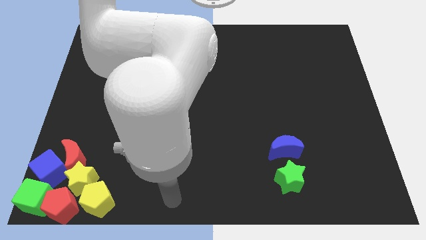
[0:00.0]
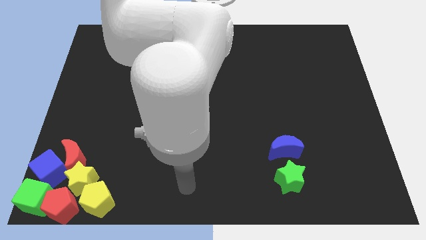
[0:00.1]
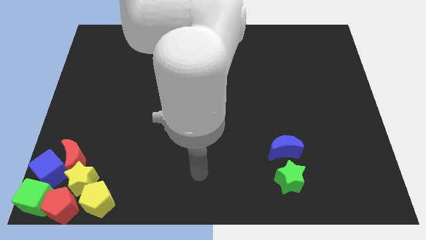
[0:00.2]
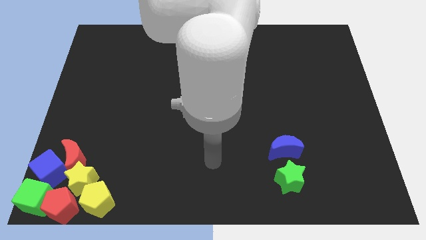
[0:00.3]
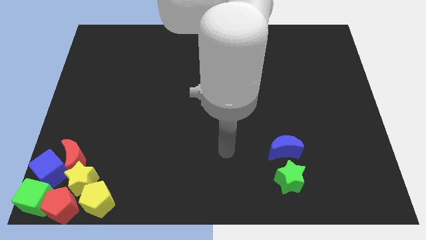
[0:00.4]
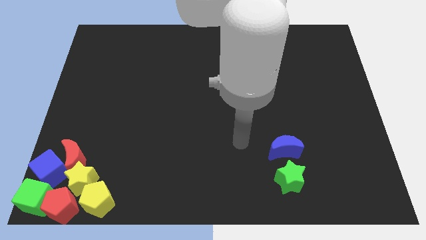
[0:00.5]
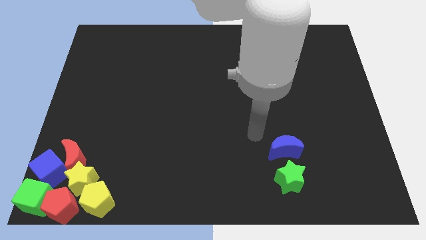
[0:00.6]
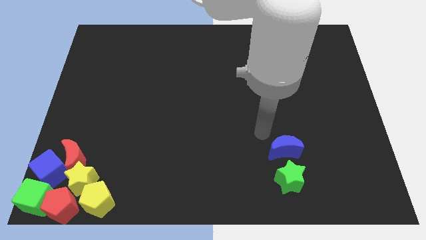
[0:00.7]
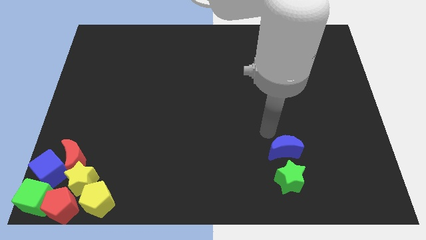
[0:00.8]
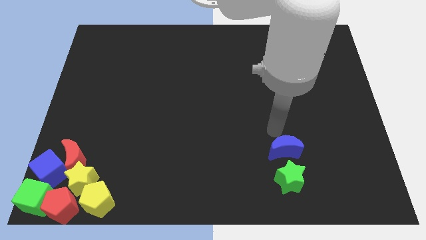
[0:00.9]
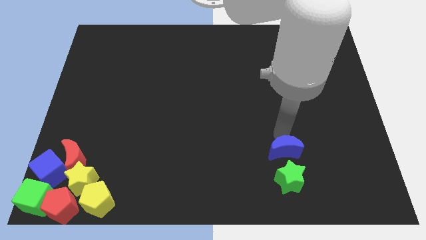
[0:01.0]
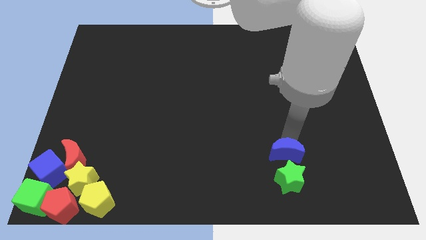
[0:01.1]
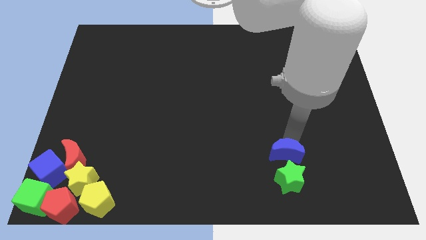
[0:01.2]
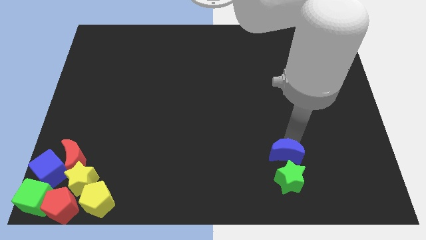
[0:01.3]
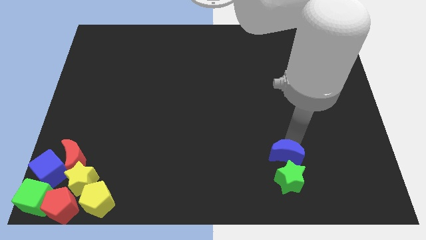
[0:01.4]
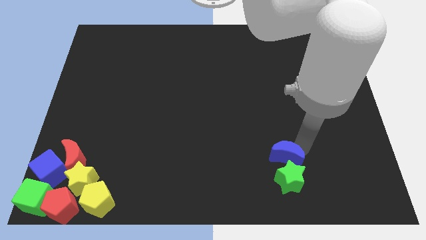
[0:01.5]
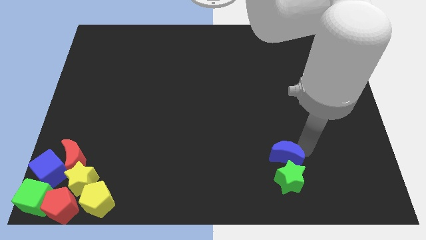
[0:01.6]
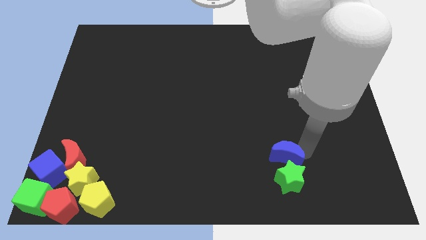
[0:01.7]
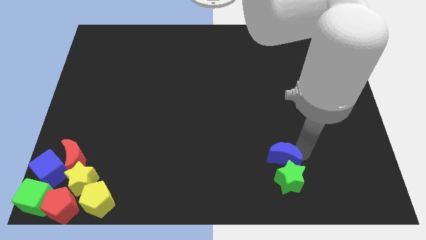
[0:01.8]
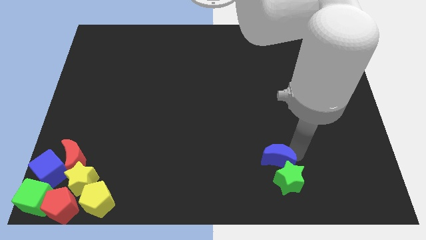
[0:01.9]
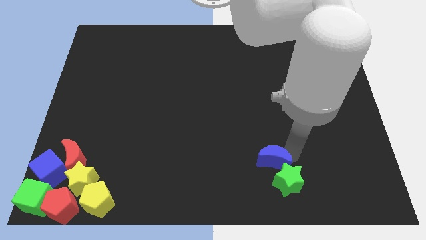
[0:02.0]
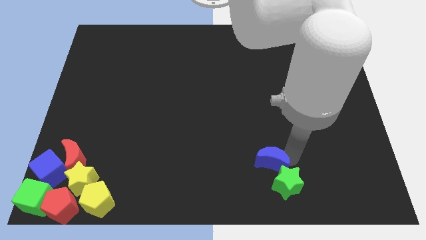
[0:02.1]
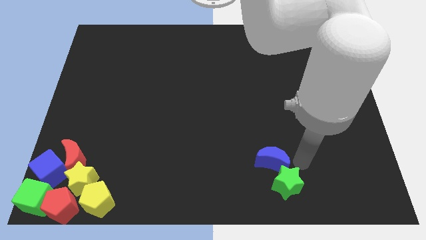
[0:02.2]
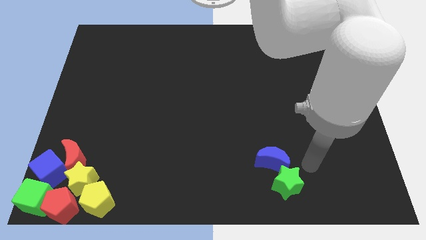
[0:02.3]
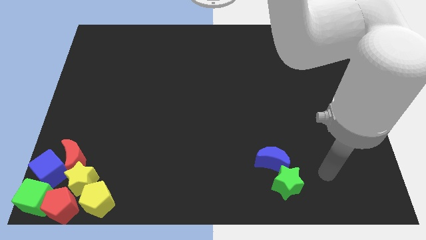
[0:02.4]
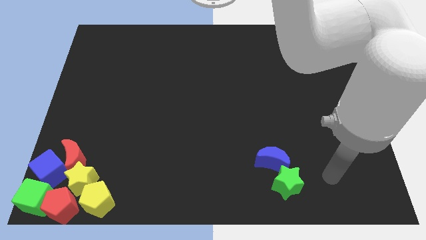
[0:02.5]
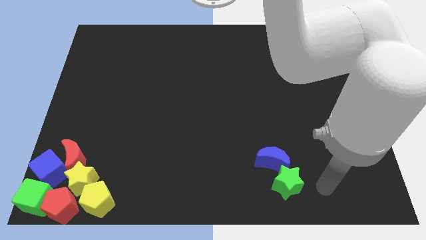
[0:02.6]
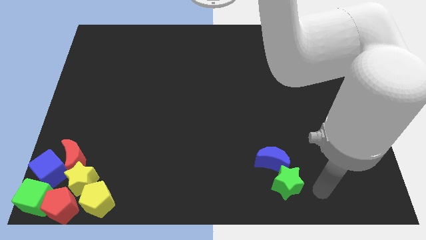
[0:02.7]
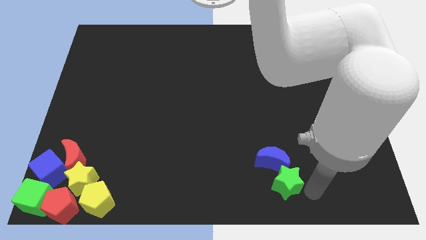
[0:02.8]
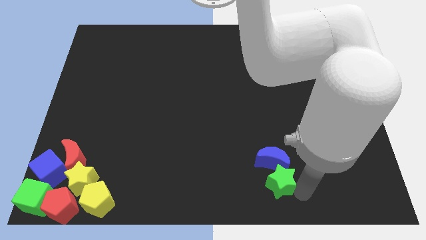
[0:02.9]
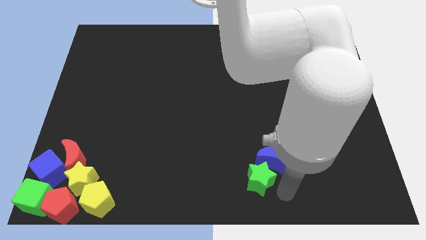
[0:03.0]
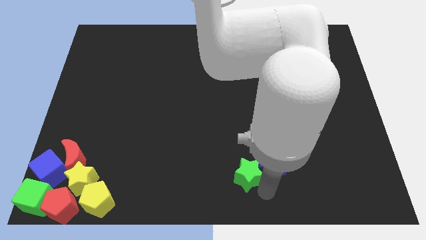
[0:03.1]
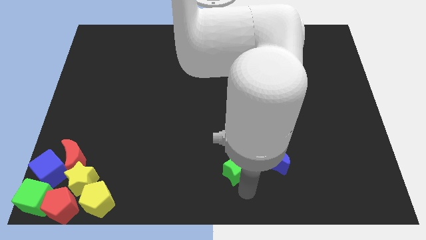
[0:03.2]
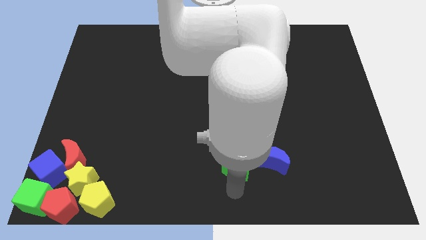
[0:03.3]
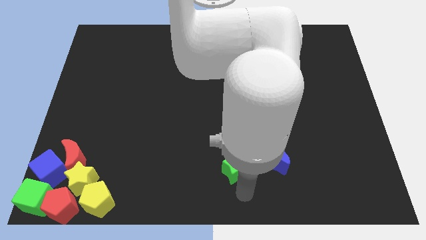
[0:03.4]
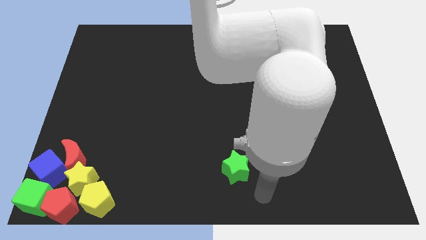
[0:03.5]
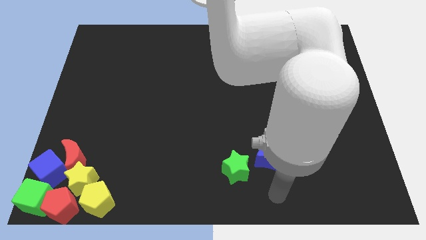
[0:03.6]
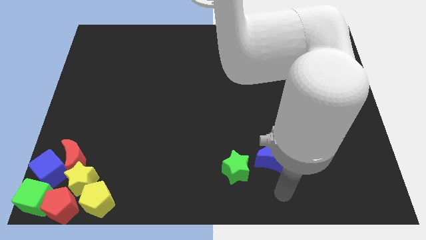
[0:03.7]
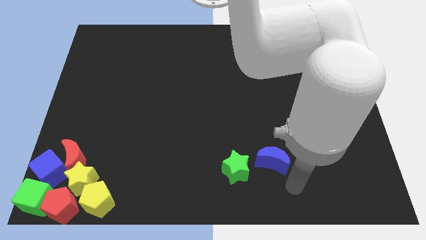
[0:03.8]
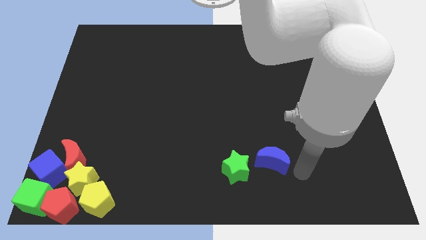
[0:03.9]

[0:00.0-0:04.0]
place the green star to the left side of the blue moon

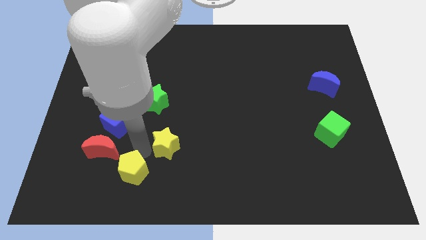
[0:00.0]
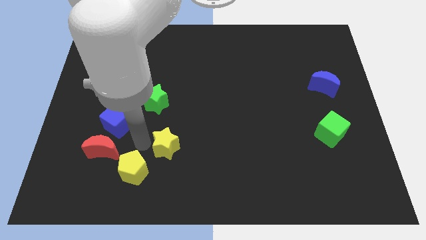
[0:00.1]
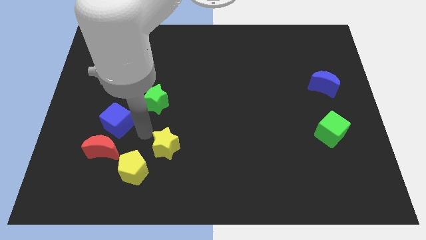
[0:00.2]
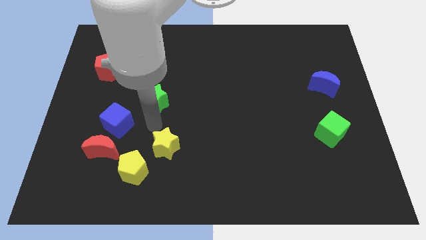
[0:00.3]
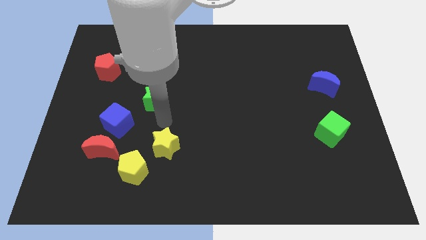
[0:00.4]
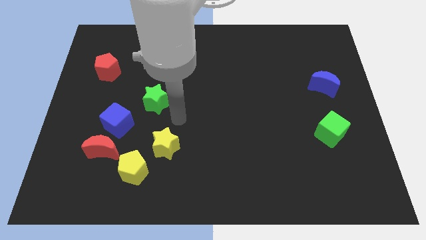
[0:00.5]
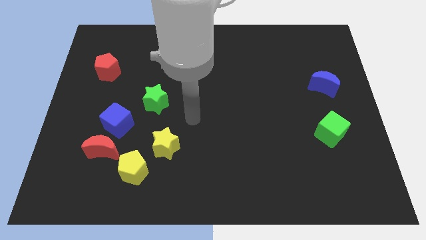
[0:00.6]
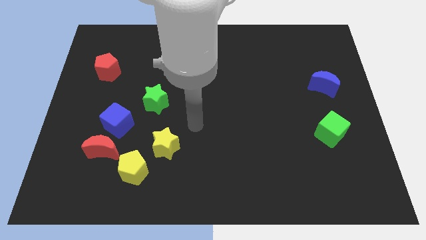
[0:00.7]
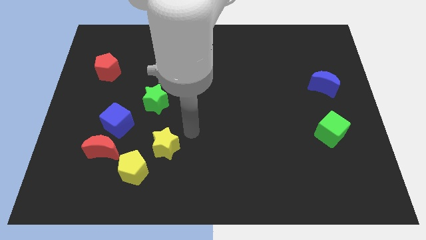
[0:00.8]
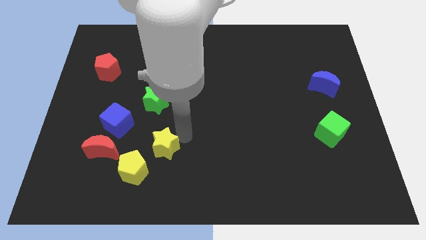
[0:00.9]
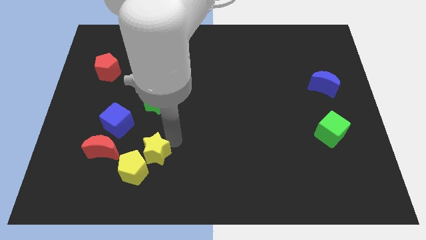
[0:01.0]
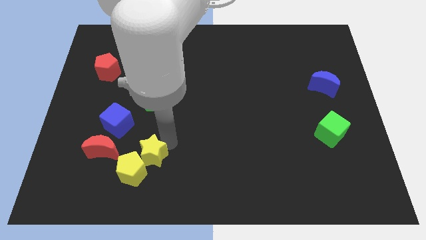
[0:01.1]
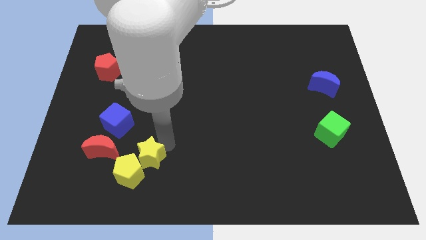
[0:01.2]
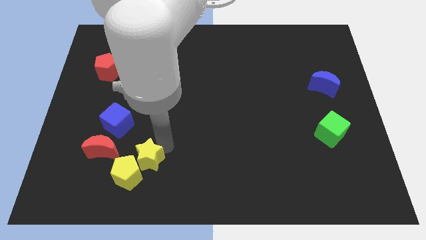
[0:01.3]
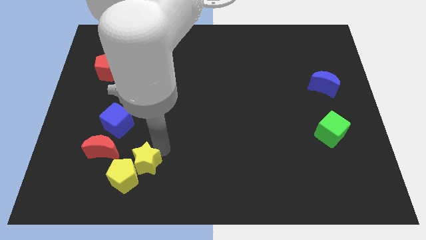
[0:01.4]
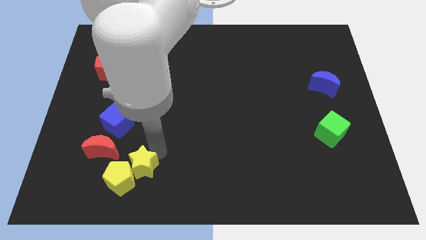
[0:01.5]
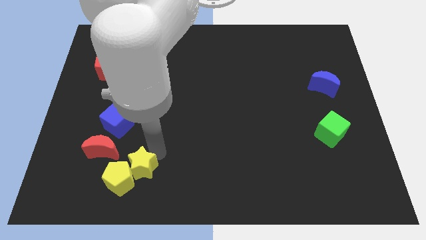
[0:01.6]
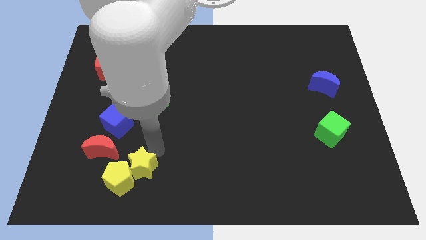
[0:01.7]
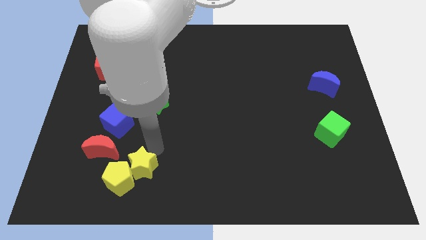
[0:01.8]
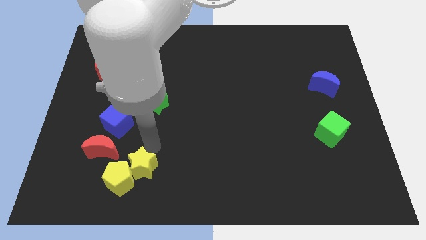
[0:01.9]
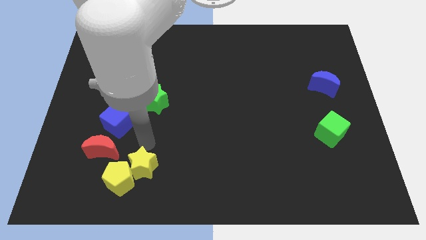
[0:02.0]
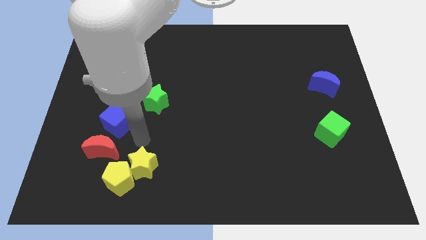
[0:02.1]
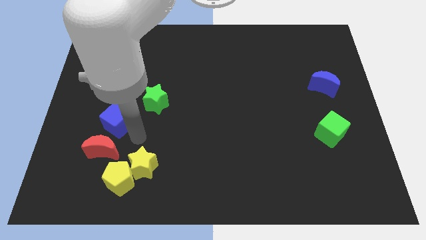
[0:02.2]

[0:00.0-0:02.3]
move the yellow star into the yellow pentagon

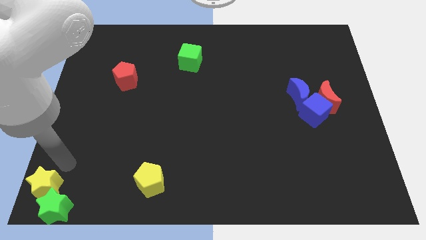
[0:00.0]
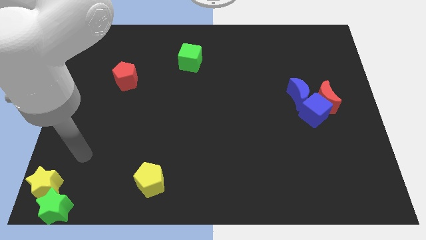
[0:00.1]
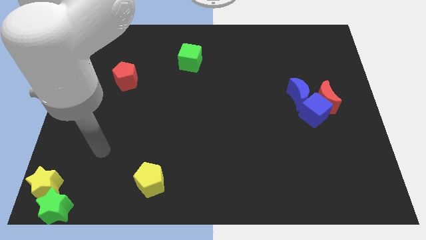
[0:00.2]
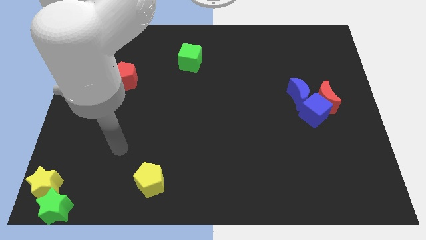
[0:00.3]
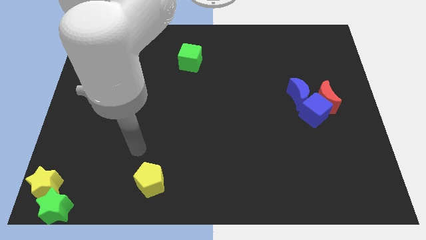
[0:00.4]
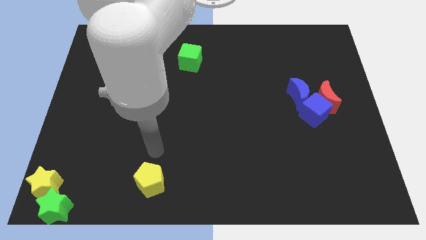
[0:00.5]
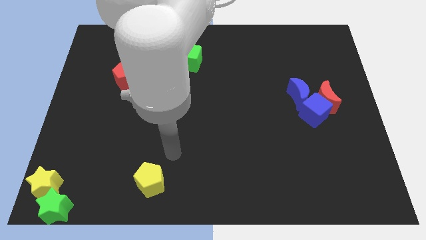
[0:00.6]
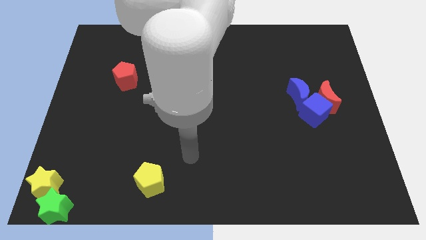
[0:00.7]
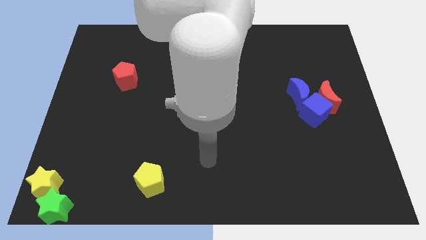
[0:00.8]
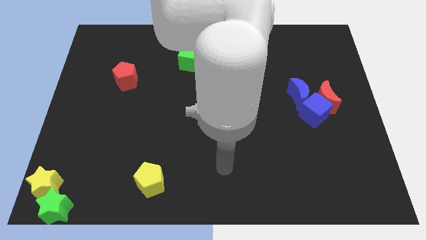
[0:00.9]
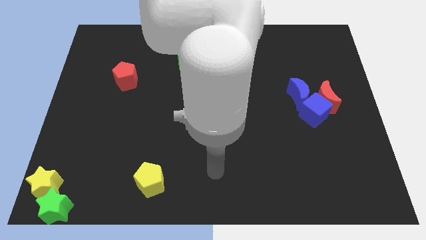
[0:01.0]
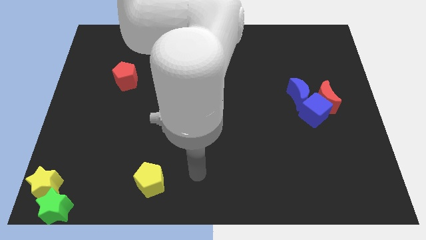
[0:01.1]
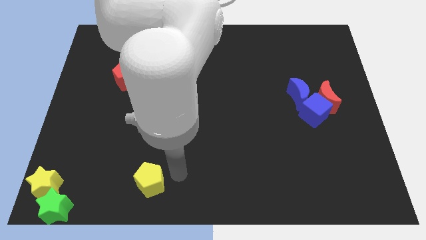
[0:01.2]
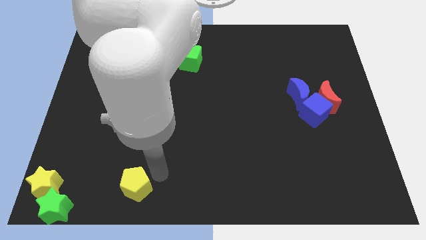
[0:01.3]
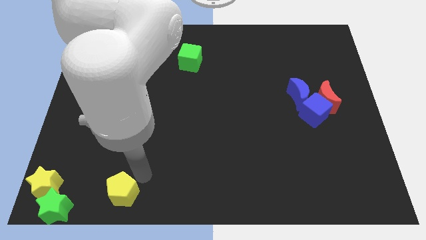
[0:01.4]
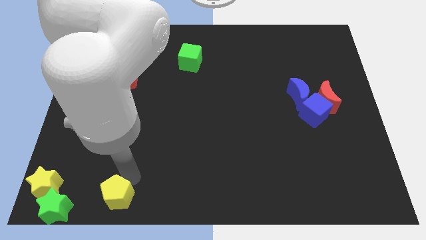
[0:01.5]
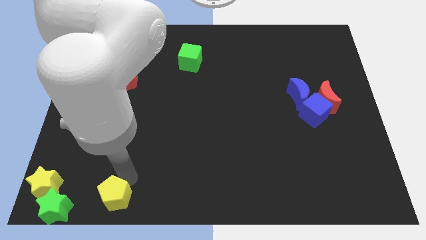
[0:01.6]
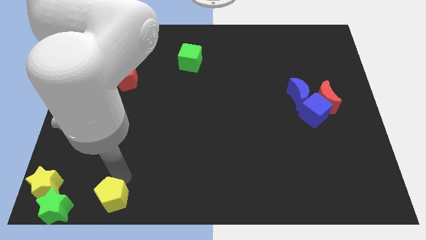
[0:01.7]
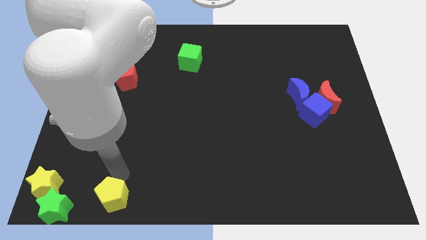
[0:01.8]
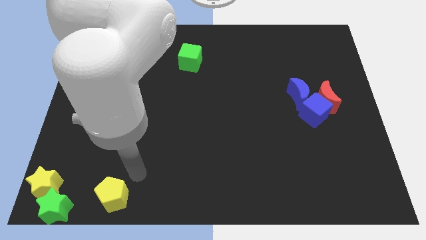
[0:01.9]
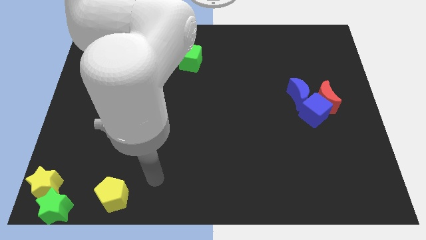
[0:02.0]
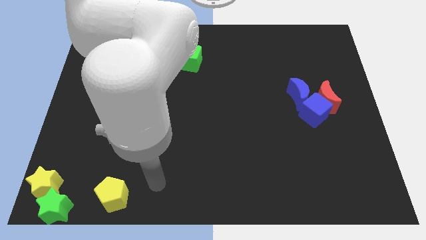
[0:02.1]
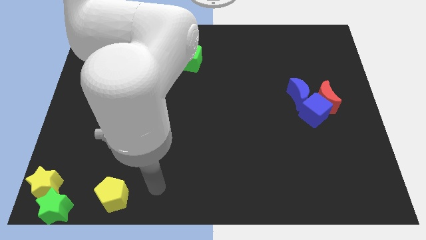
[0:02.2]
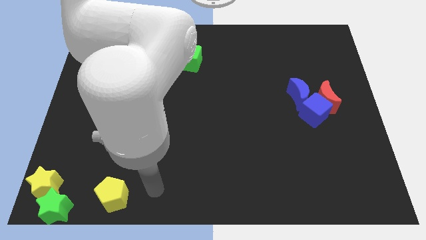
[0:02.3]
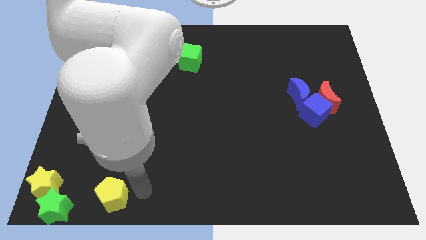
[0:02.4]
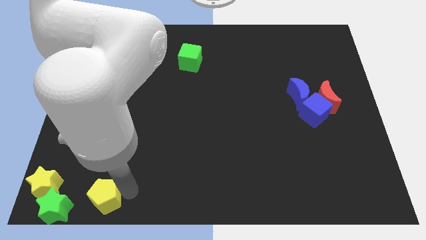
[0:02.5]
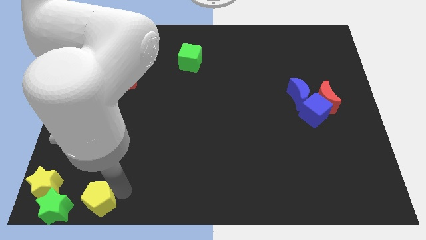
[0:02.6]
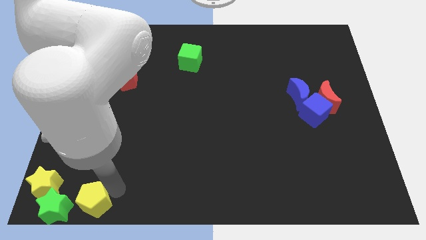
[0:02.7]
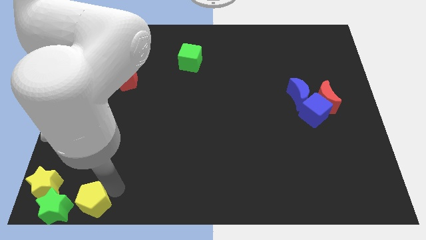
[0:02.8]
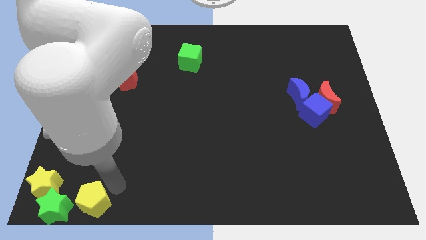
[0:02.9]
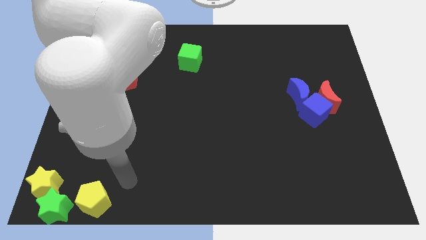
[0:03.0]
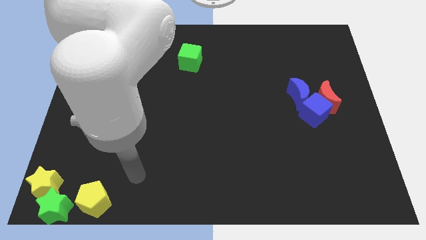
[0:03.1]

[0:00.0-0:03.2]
move the yellow pentagon to the top right side of the green star
